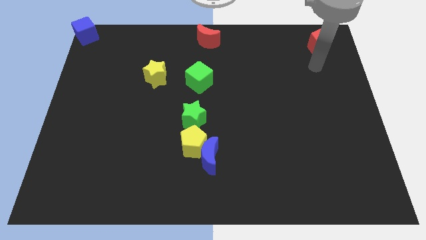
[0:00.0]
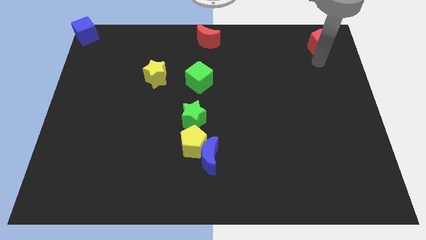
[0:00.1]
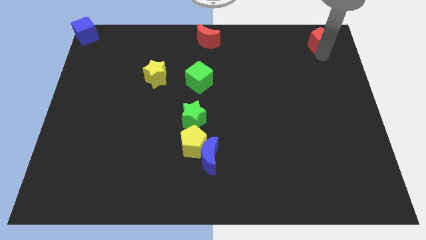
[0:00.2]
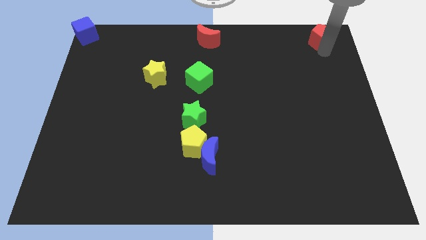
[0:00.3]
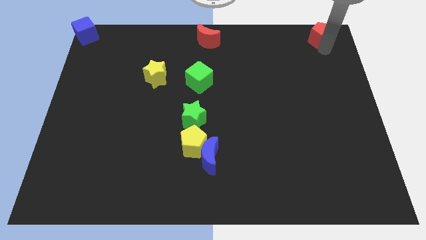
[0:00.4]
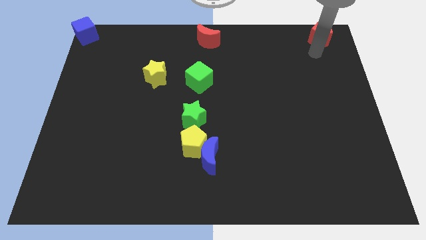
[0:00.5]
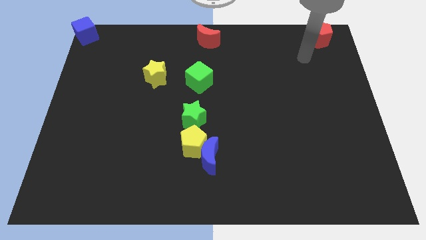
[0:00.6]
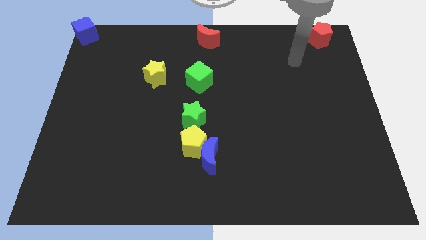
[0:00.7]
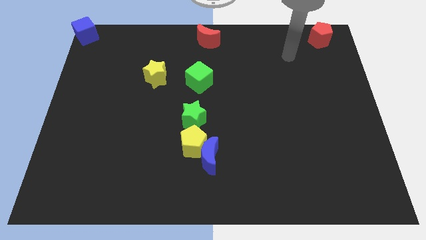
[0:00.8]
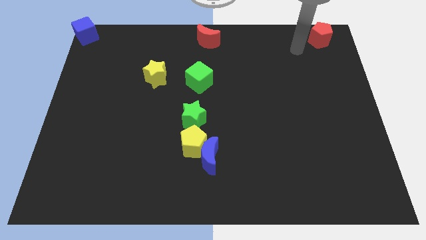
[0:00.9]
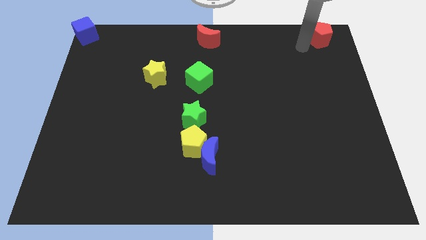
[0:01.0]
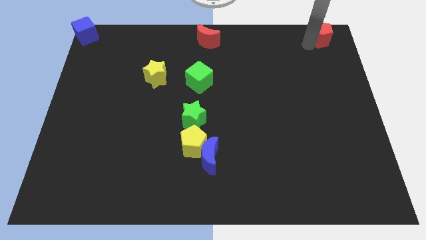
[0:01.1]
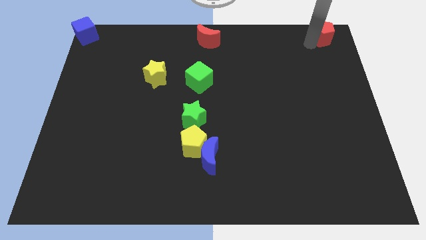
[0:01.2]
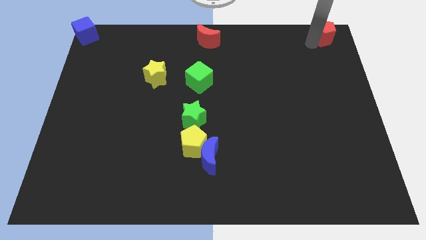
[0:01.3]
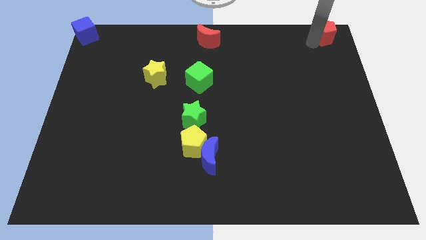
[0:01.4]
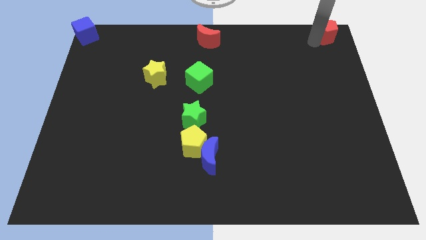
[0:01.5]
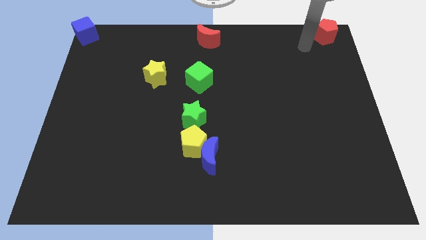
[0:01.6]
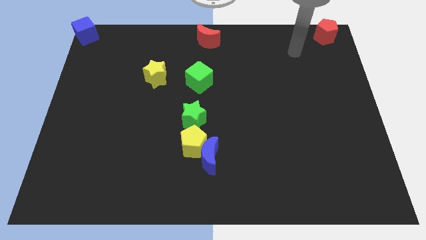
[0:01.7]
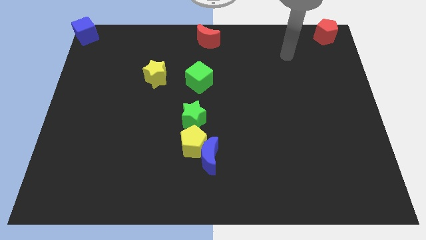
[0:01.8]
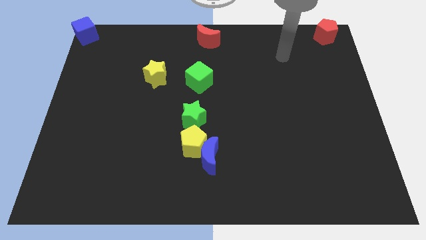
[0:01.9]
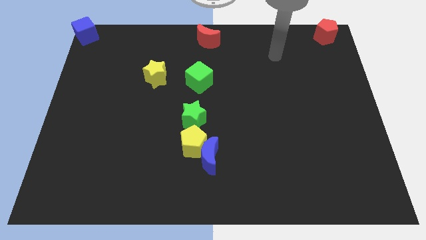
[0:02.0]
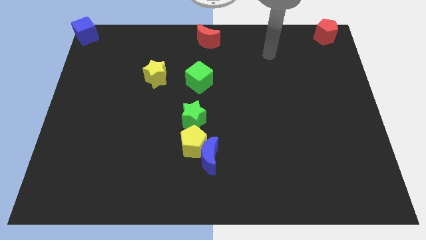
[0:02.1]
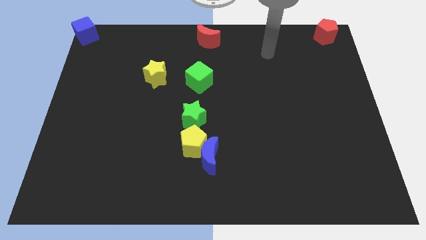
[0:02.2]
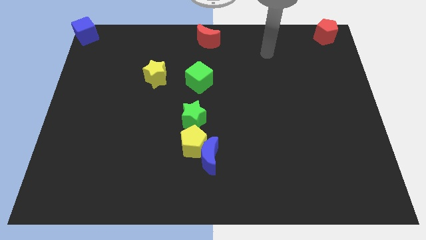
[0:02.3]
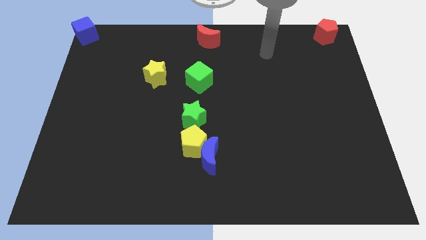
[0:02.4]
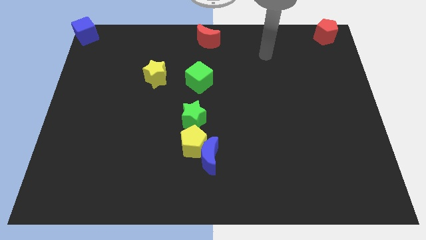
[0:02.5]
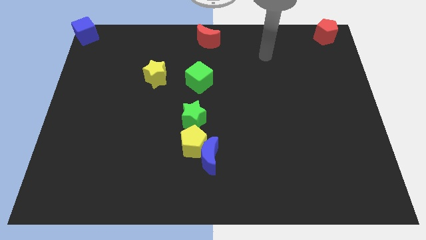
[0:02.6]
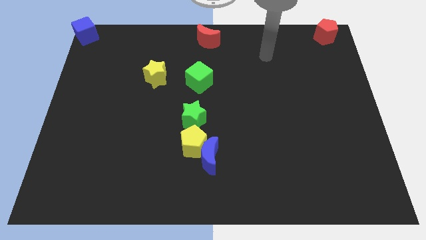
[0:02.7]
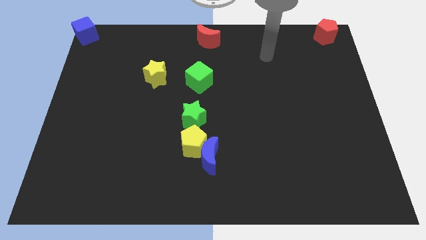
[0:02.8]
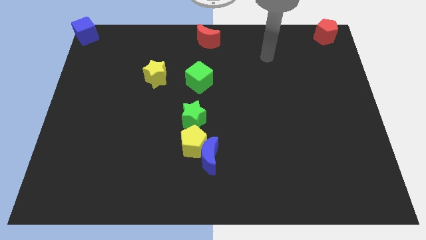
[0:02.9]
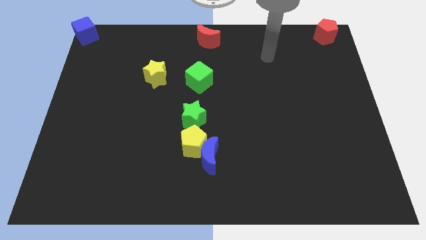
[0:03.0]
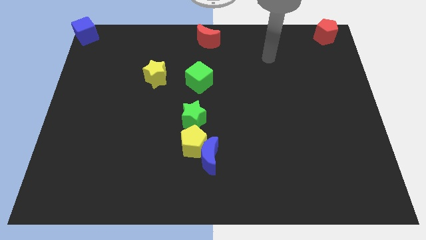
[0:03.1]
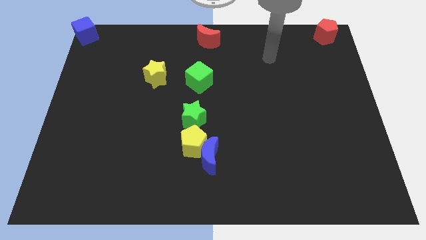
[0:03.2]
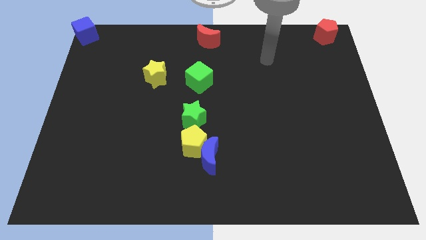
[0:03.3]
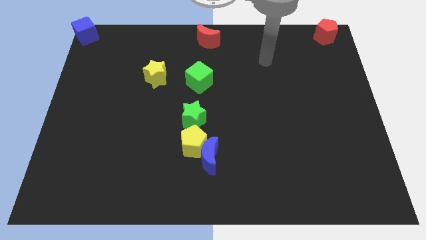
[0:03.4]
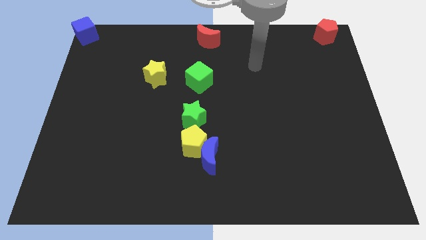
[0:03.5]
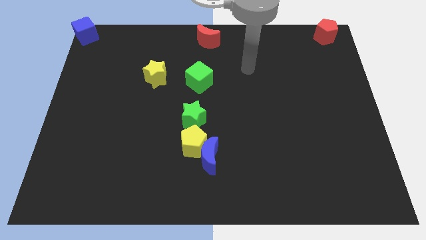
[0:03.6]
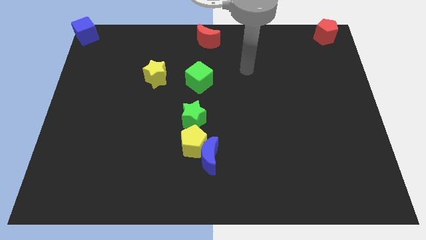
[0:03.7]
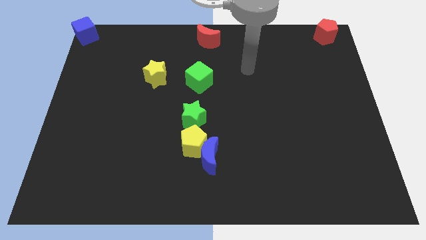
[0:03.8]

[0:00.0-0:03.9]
push the red pentagon slightly to the top right corner of the board

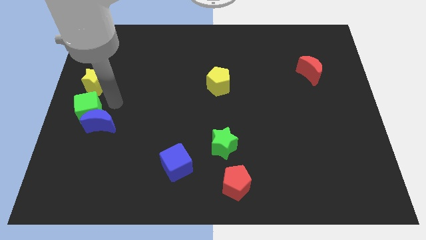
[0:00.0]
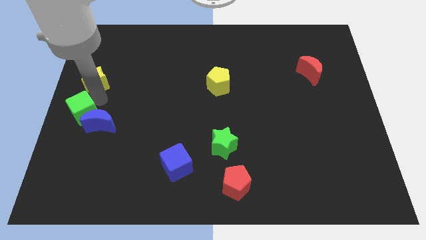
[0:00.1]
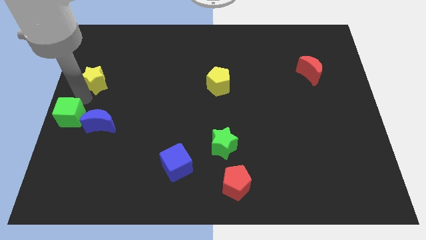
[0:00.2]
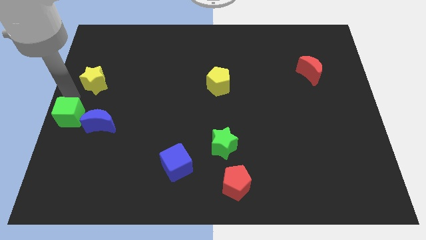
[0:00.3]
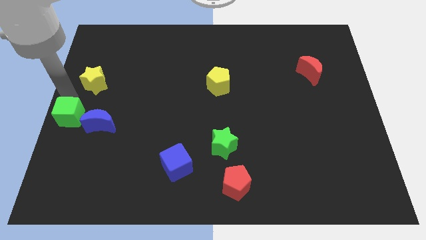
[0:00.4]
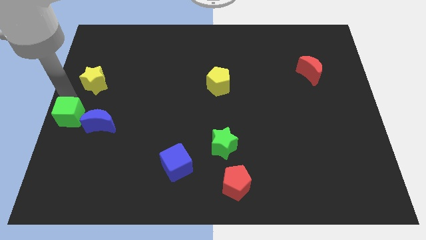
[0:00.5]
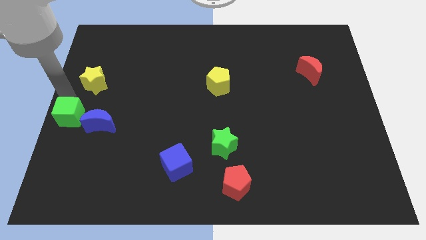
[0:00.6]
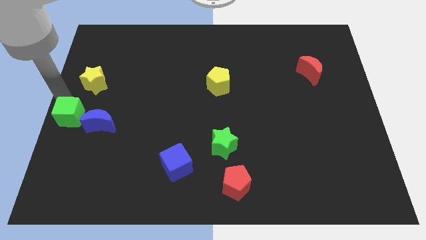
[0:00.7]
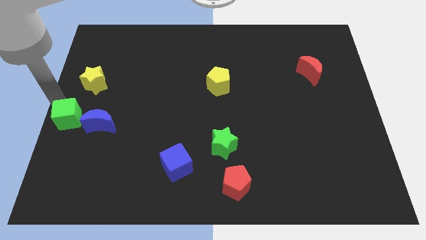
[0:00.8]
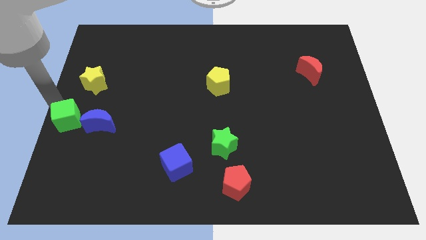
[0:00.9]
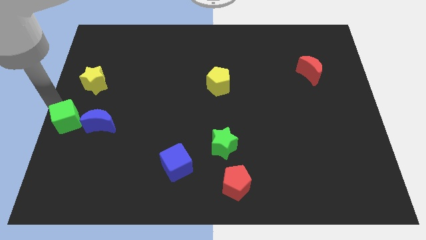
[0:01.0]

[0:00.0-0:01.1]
push the green cube to the left side of the blue crescent

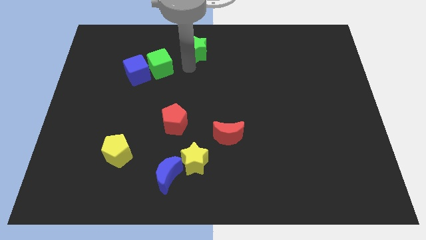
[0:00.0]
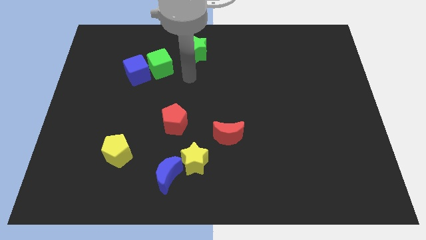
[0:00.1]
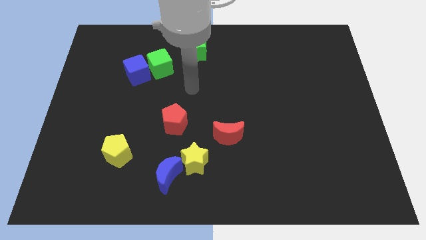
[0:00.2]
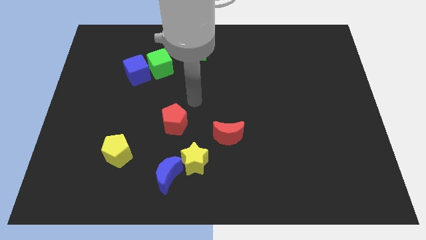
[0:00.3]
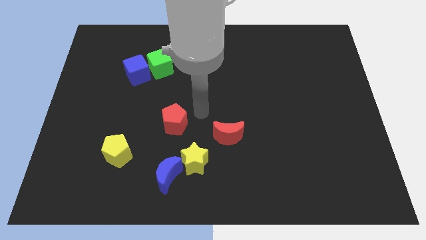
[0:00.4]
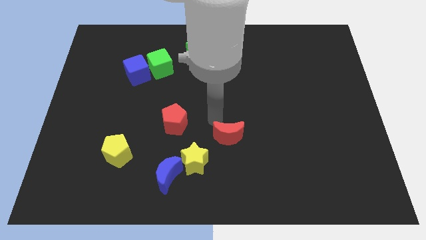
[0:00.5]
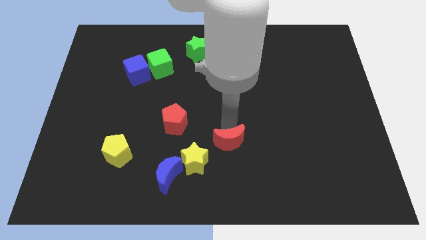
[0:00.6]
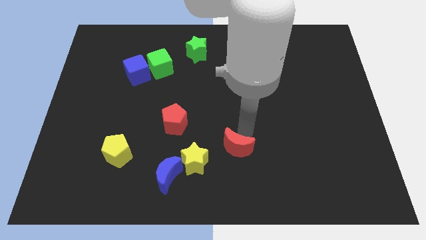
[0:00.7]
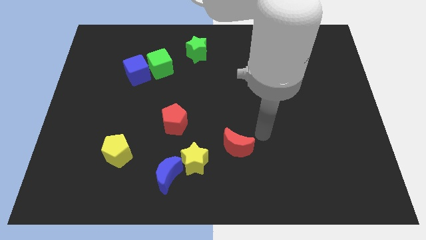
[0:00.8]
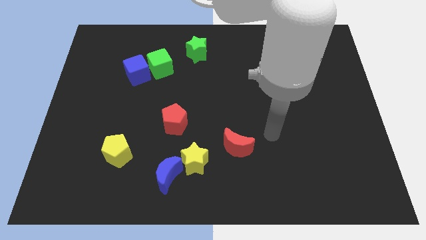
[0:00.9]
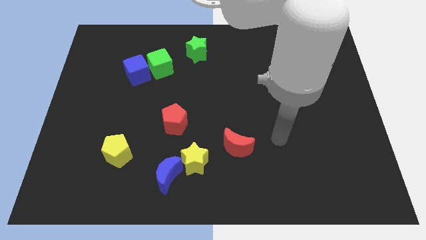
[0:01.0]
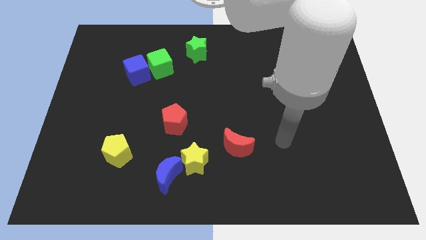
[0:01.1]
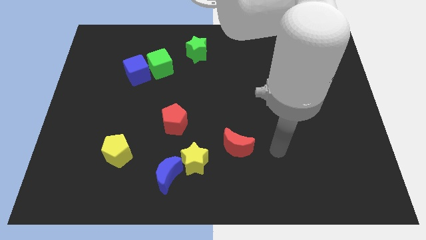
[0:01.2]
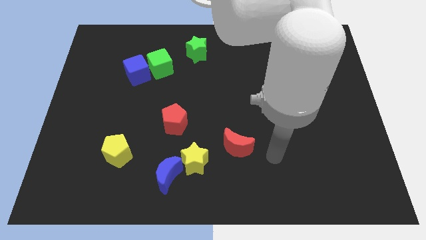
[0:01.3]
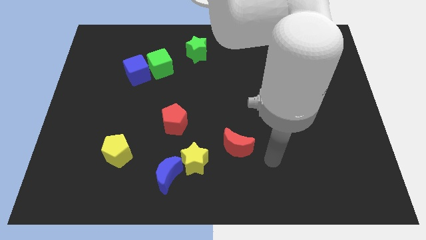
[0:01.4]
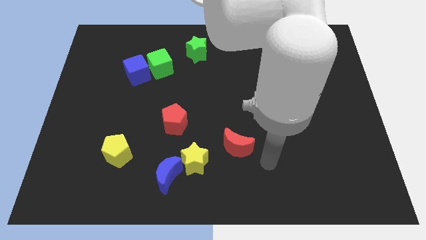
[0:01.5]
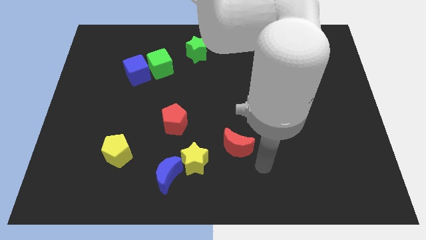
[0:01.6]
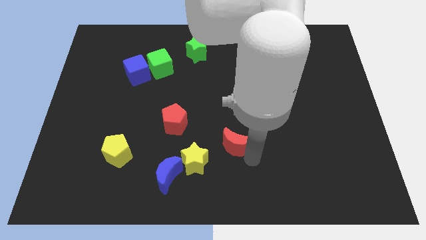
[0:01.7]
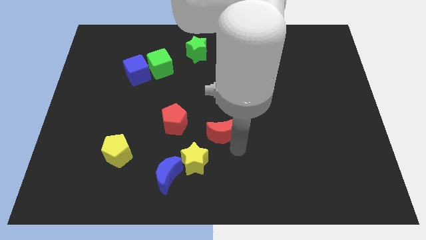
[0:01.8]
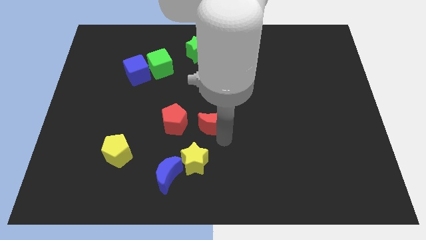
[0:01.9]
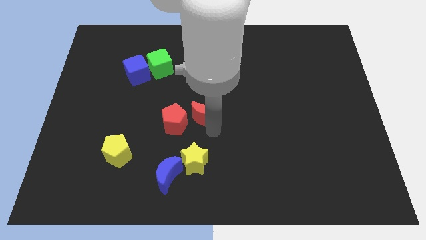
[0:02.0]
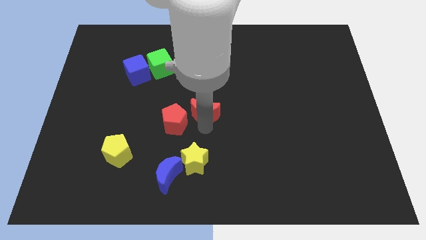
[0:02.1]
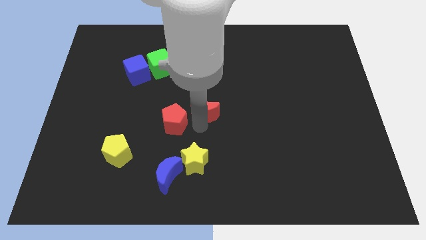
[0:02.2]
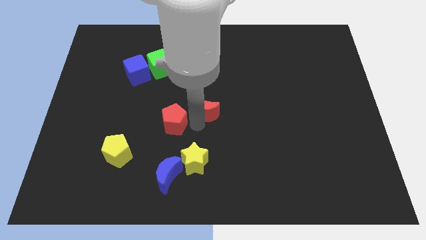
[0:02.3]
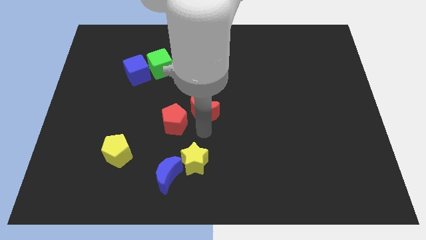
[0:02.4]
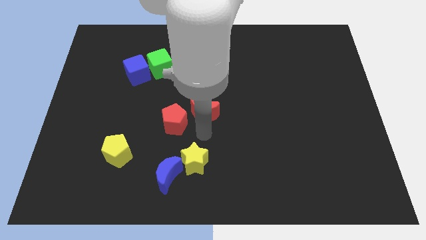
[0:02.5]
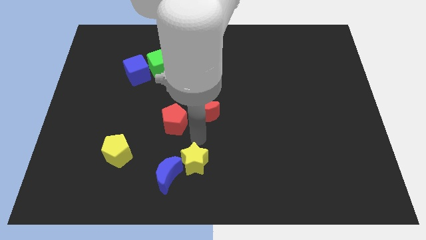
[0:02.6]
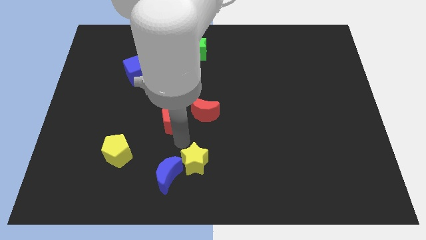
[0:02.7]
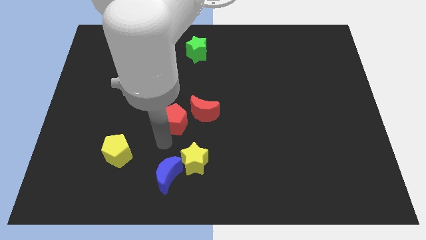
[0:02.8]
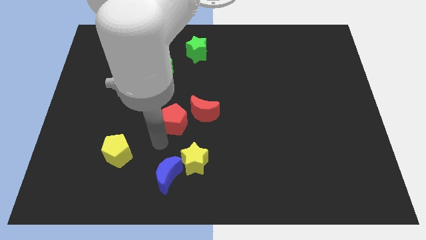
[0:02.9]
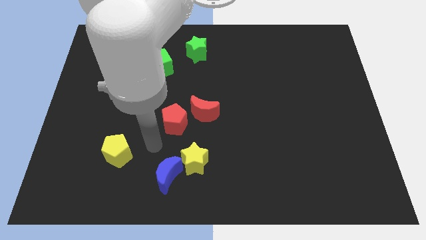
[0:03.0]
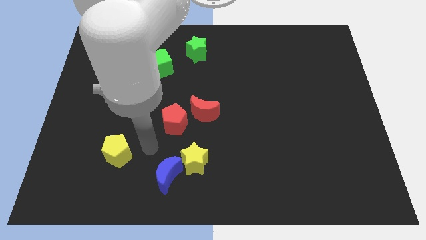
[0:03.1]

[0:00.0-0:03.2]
place the red moon right to the red pentagon

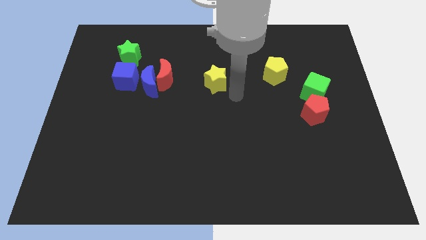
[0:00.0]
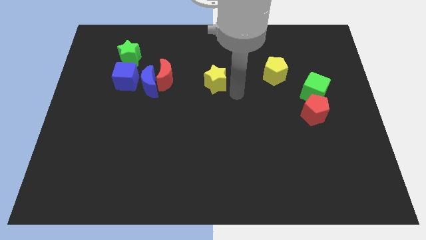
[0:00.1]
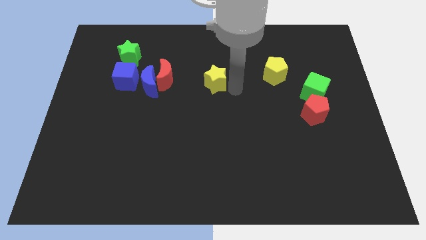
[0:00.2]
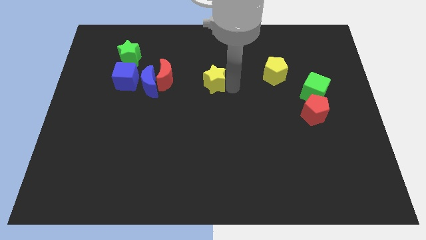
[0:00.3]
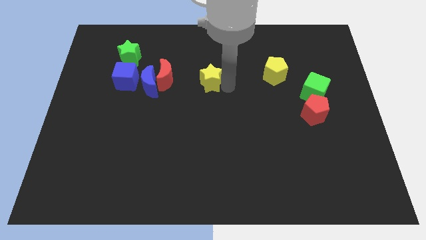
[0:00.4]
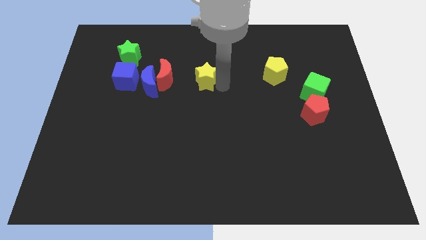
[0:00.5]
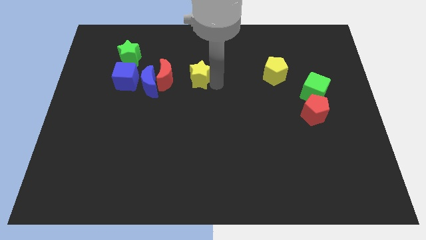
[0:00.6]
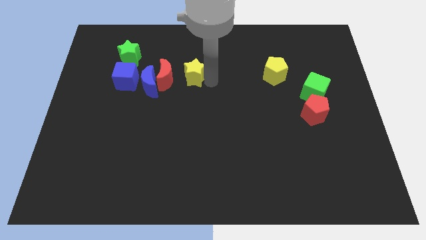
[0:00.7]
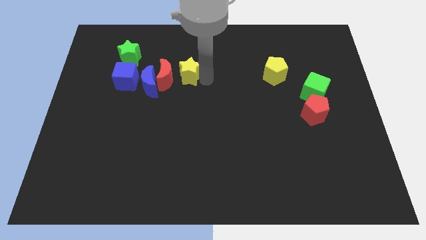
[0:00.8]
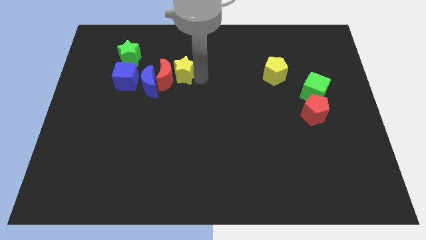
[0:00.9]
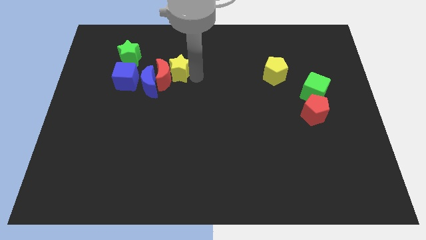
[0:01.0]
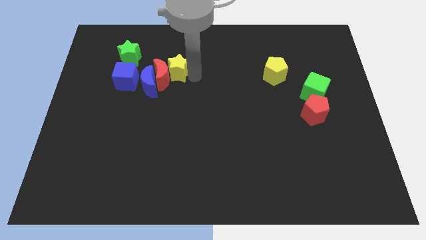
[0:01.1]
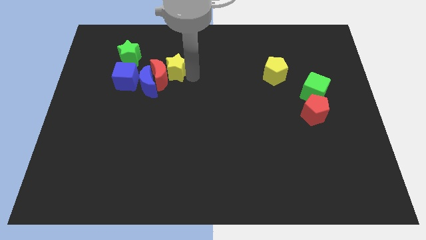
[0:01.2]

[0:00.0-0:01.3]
move the yellow star into the red crescent
